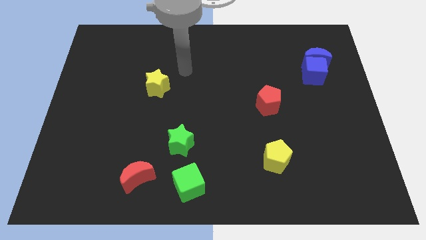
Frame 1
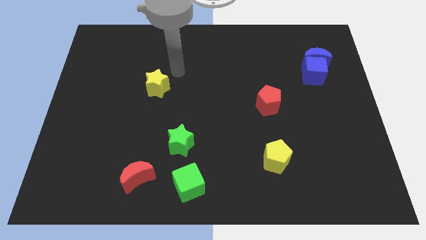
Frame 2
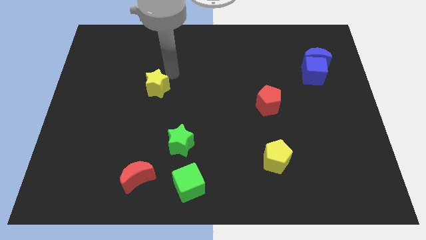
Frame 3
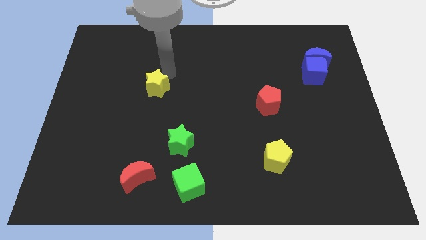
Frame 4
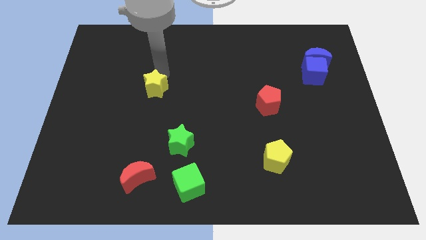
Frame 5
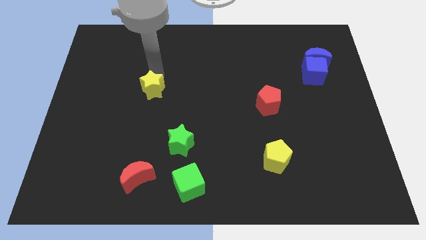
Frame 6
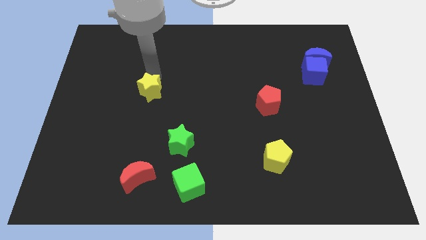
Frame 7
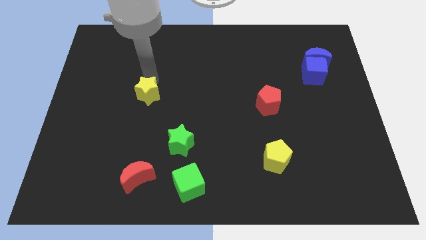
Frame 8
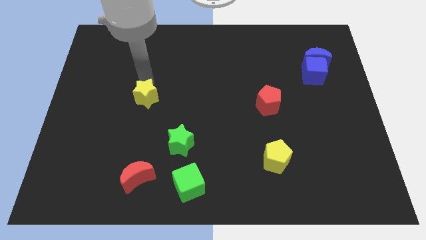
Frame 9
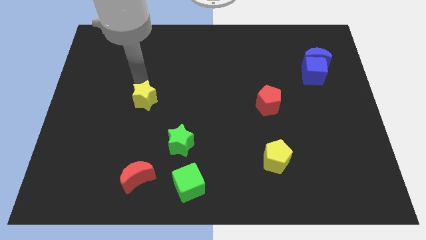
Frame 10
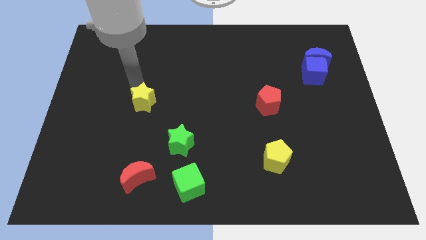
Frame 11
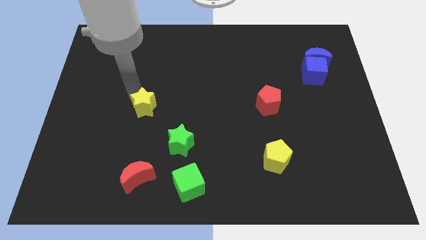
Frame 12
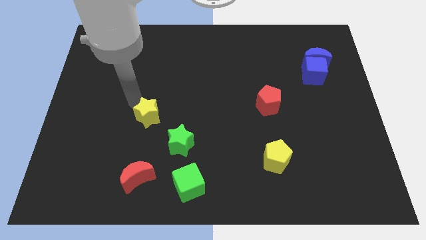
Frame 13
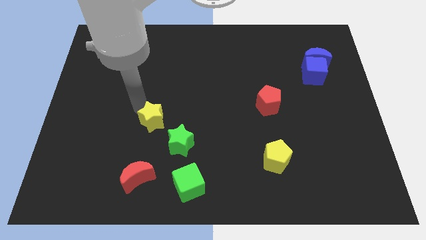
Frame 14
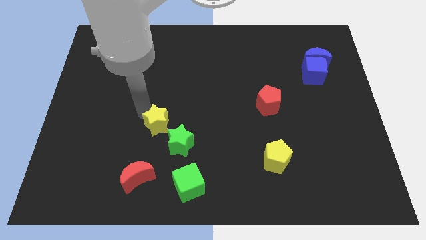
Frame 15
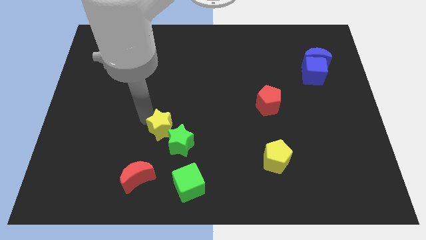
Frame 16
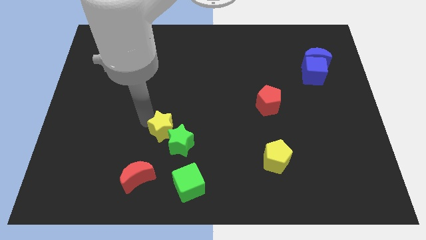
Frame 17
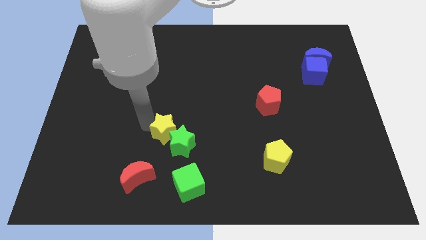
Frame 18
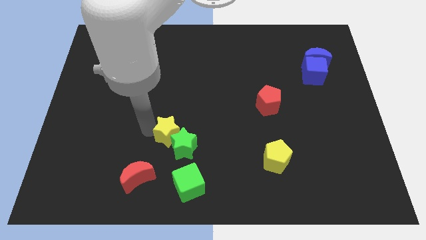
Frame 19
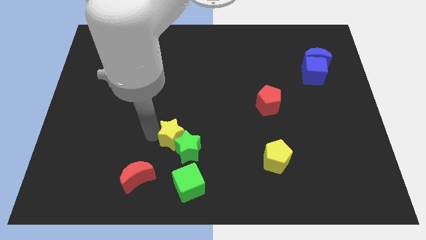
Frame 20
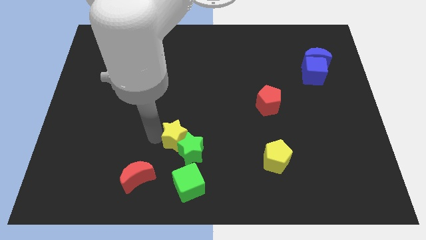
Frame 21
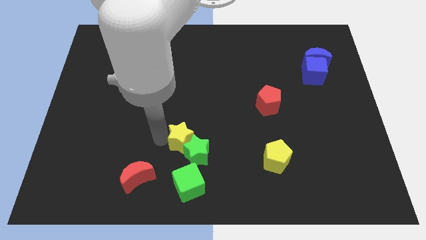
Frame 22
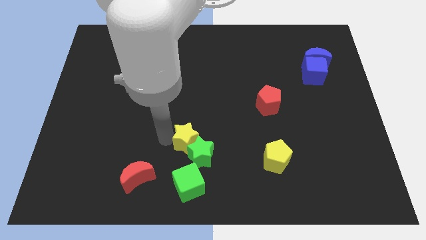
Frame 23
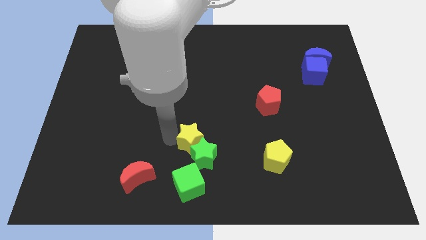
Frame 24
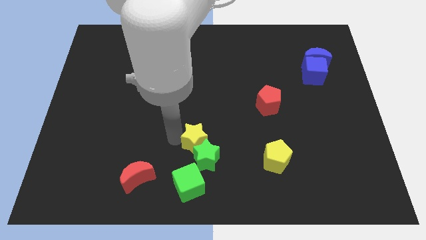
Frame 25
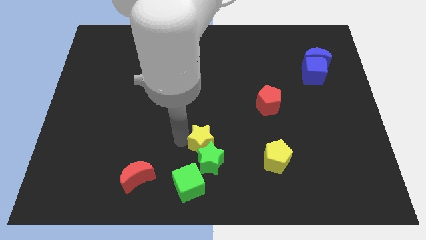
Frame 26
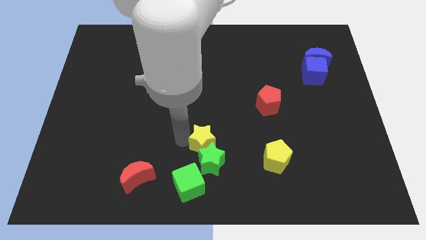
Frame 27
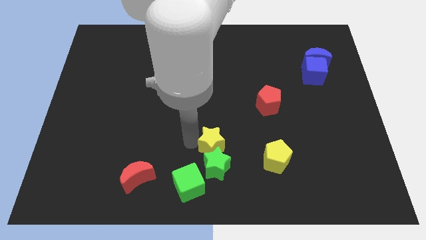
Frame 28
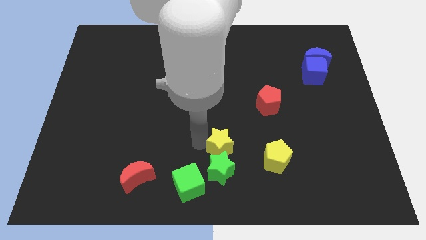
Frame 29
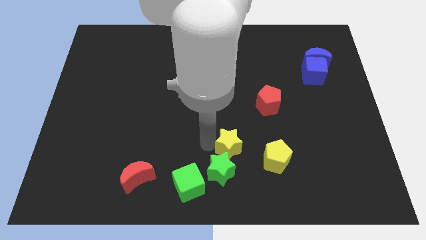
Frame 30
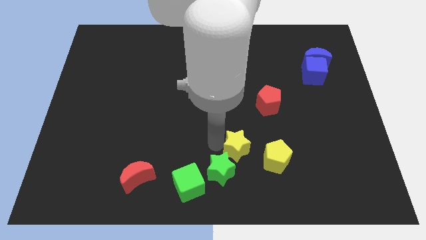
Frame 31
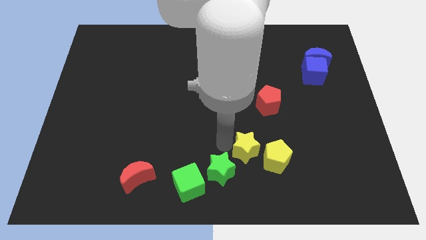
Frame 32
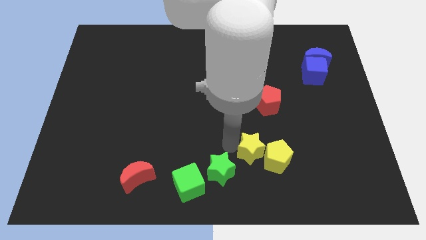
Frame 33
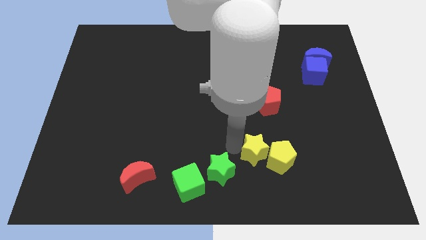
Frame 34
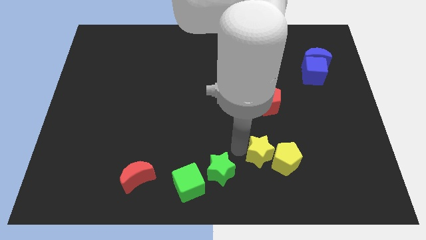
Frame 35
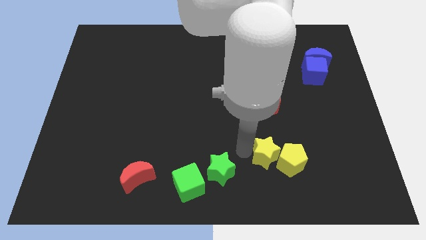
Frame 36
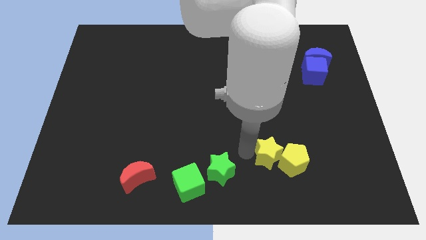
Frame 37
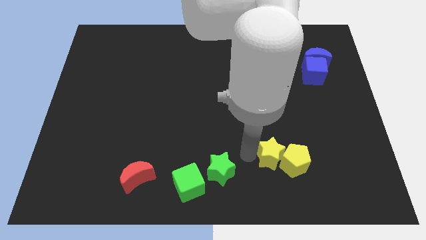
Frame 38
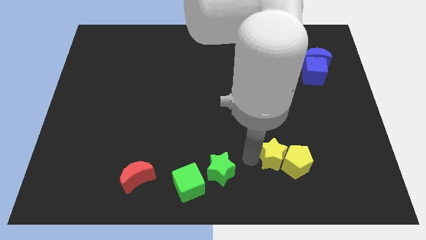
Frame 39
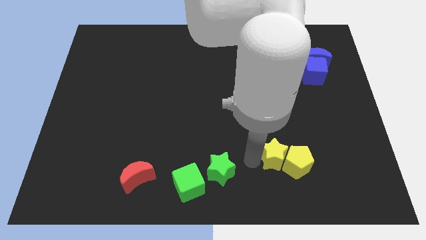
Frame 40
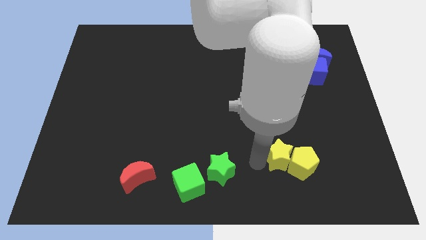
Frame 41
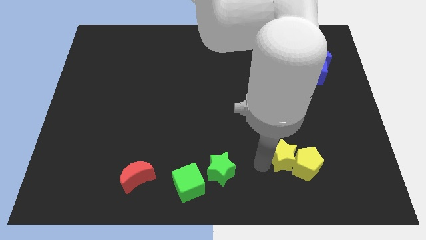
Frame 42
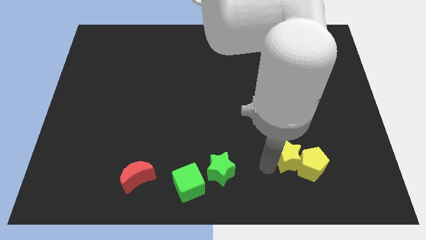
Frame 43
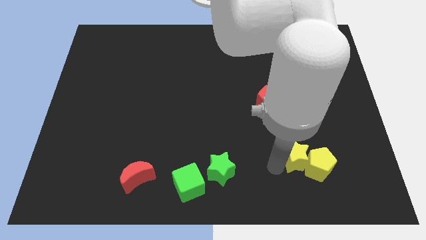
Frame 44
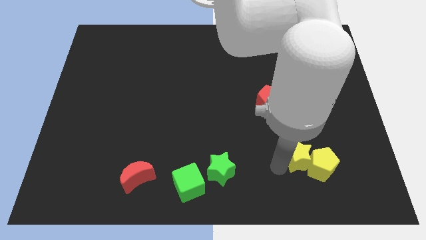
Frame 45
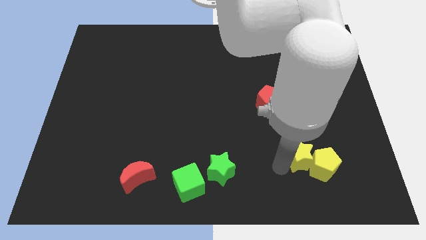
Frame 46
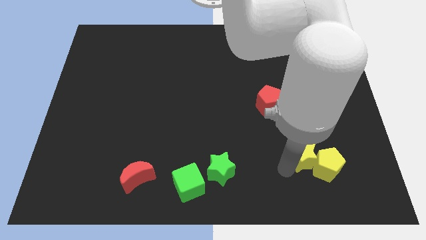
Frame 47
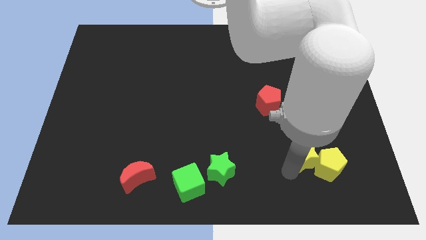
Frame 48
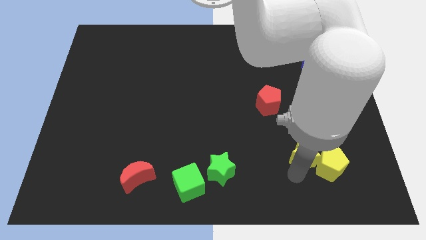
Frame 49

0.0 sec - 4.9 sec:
move the yellow star into the yellow pentagon

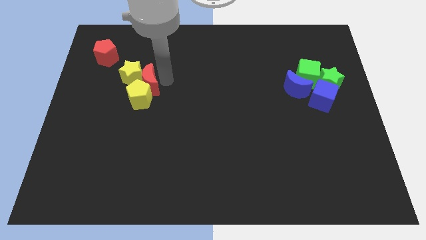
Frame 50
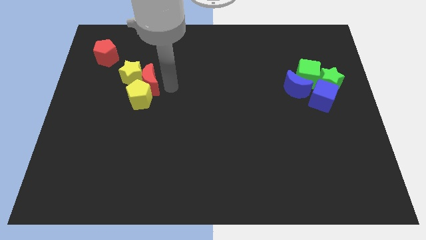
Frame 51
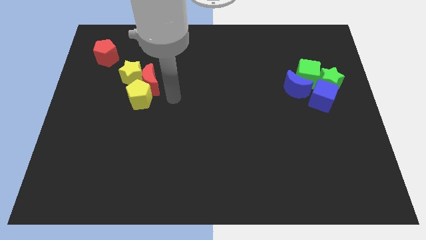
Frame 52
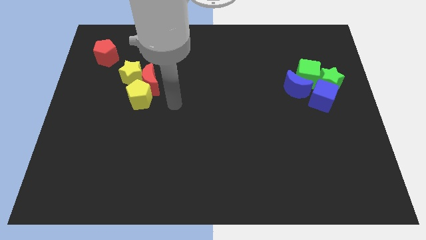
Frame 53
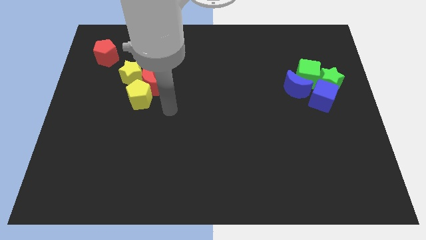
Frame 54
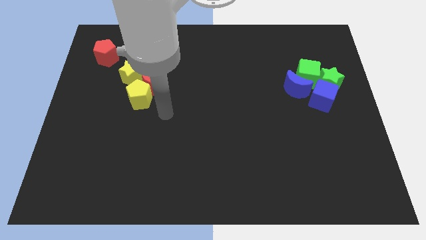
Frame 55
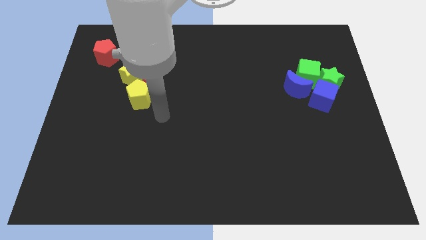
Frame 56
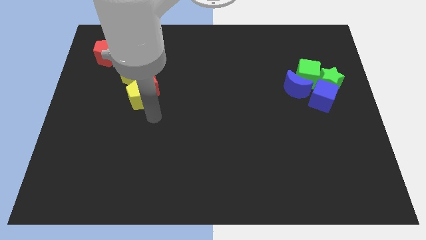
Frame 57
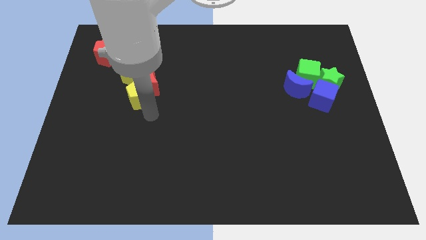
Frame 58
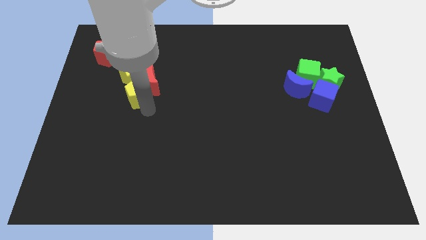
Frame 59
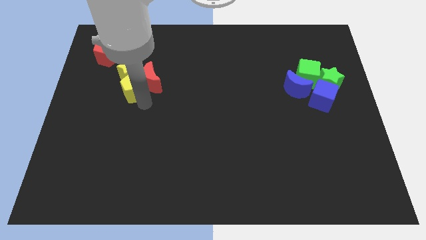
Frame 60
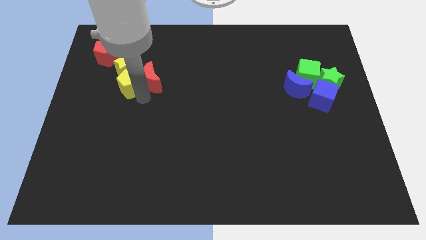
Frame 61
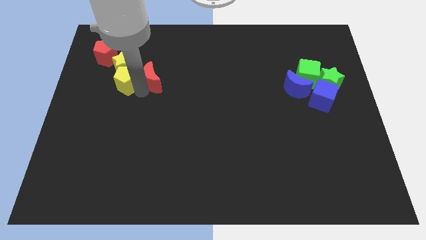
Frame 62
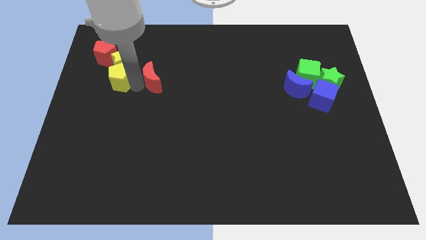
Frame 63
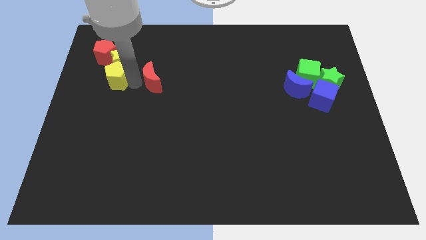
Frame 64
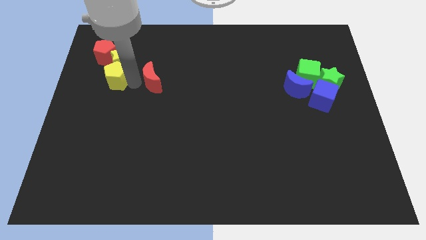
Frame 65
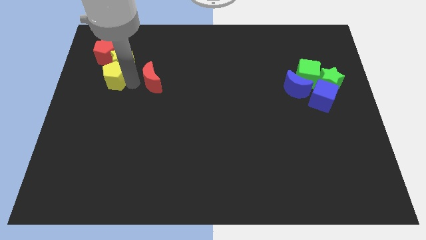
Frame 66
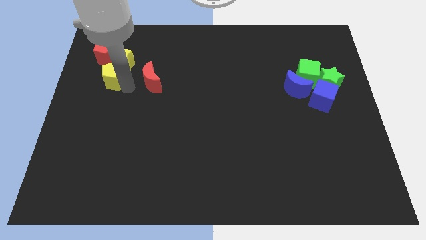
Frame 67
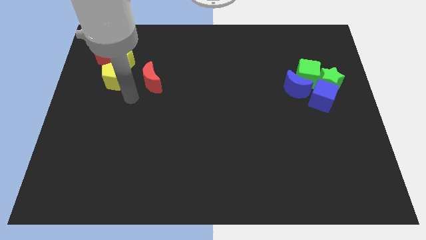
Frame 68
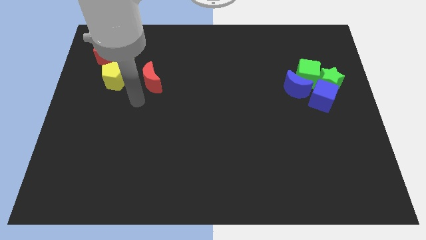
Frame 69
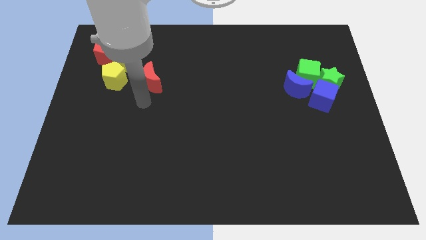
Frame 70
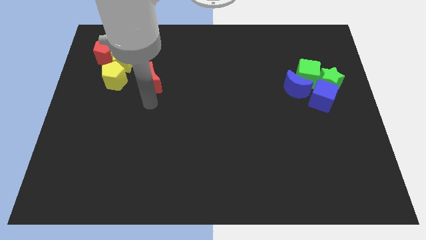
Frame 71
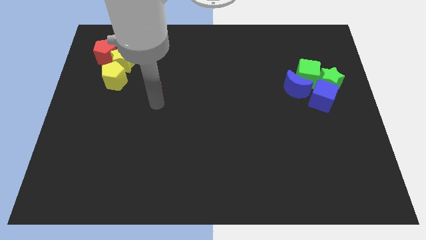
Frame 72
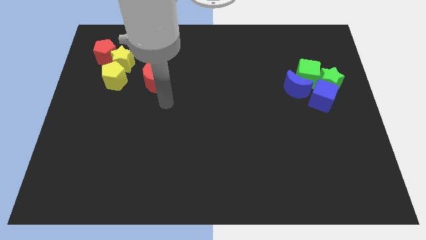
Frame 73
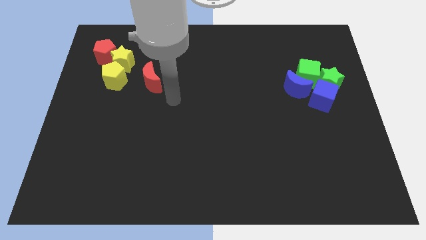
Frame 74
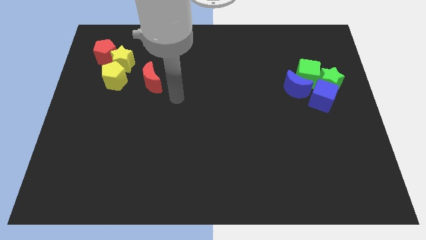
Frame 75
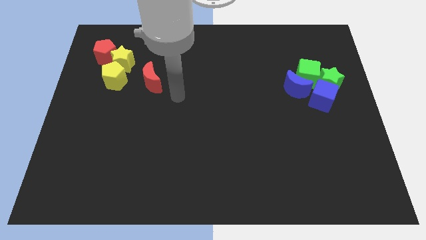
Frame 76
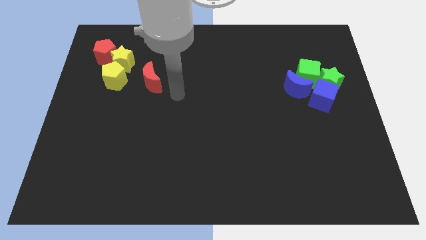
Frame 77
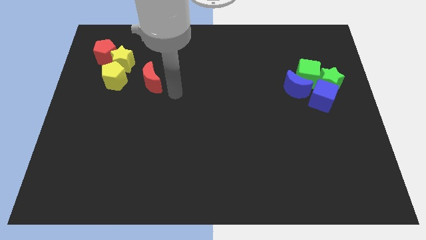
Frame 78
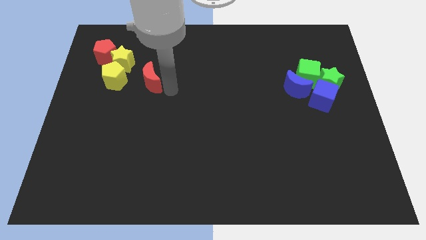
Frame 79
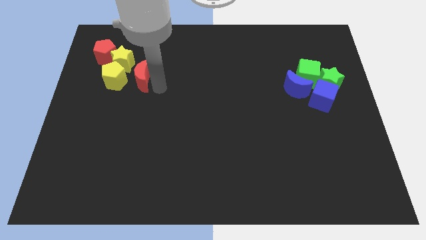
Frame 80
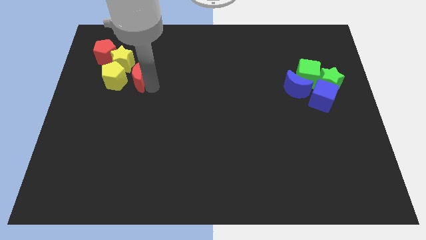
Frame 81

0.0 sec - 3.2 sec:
push the yellow pentagon into the yellow star

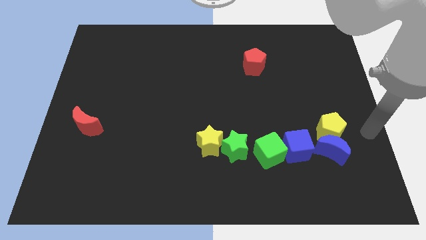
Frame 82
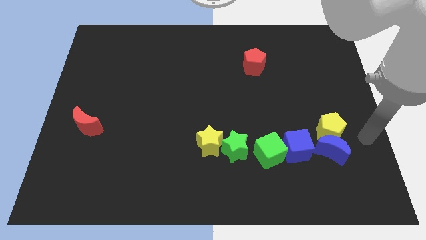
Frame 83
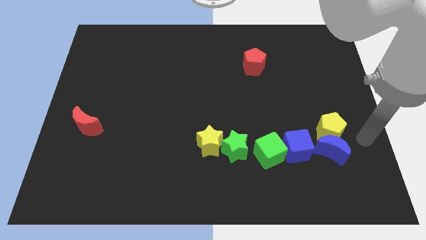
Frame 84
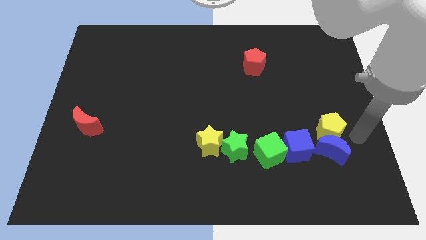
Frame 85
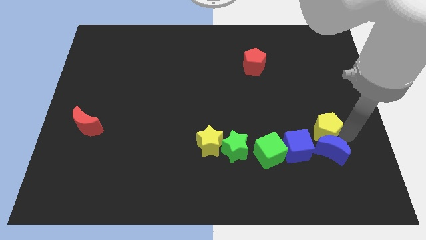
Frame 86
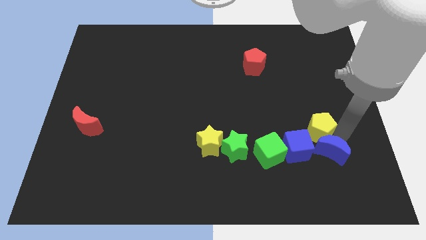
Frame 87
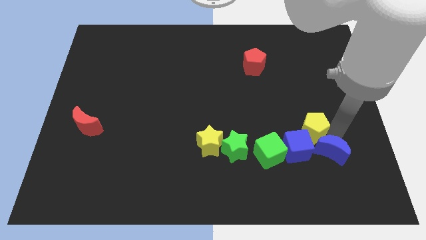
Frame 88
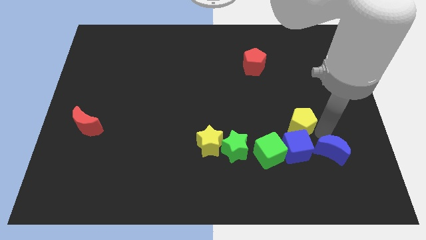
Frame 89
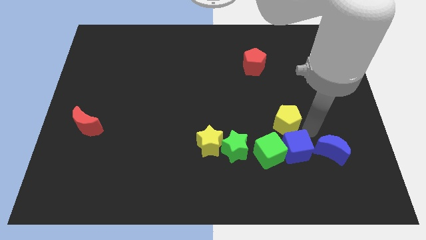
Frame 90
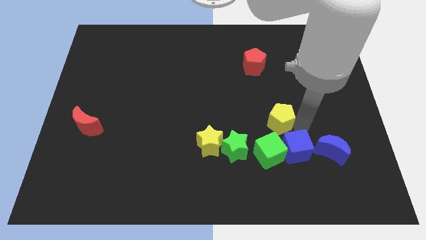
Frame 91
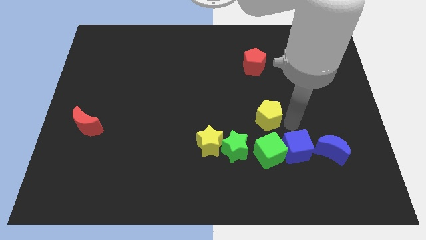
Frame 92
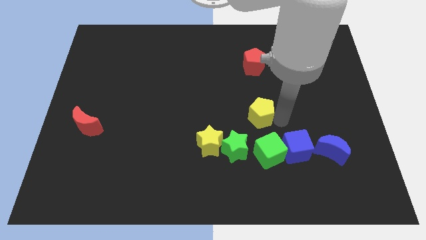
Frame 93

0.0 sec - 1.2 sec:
separate the yellow pentagon from the blue crescent
